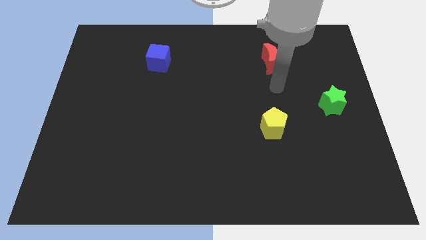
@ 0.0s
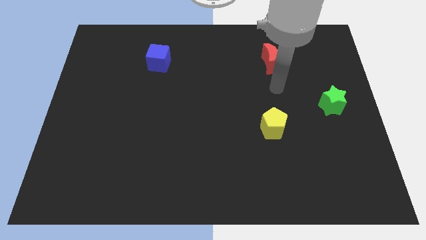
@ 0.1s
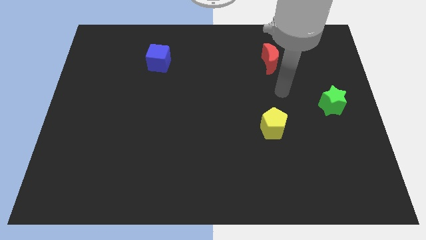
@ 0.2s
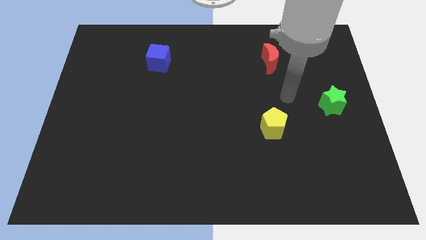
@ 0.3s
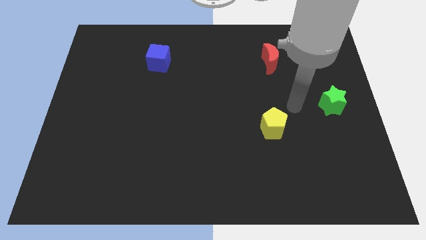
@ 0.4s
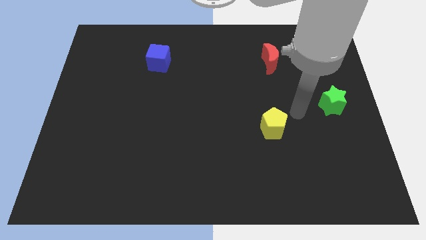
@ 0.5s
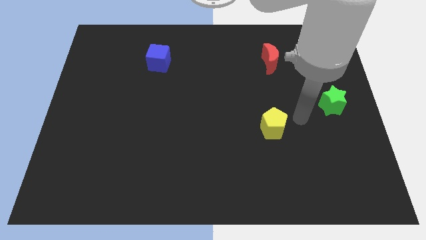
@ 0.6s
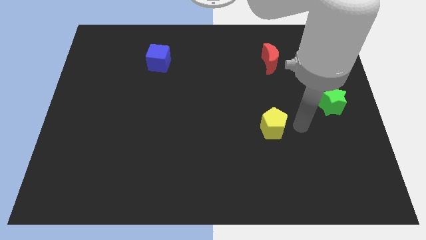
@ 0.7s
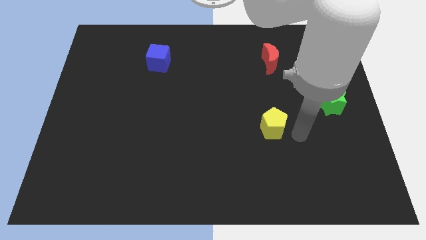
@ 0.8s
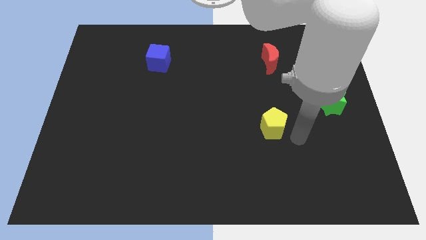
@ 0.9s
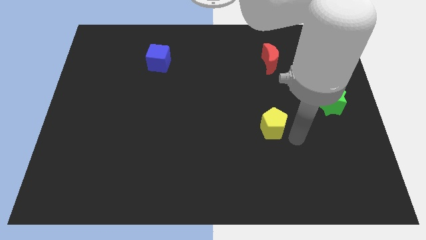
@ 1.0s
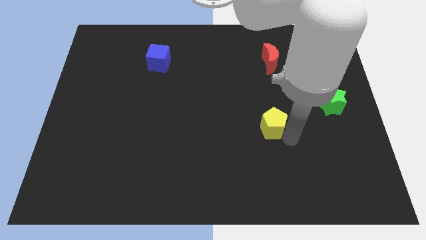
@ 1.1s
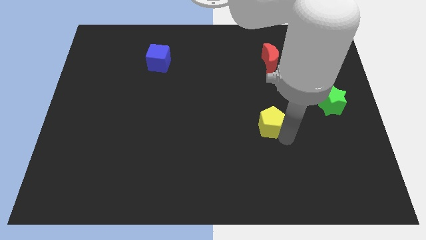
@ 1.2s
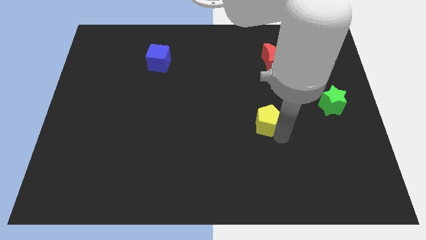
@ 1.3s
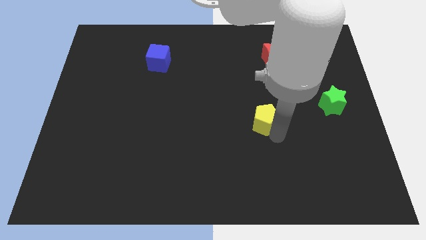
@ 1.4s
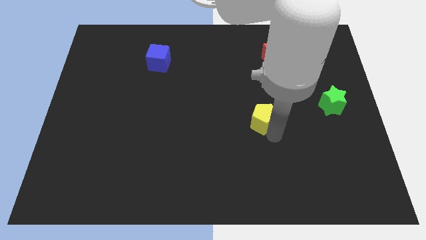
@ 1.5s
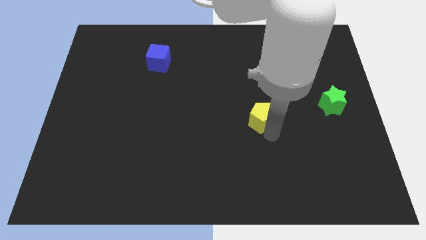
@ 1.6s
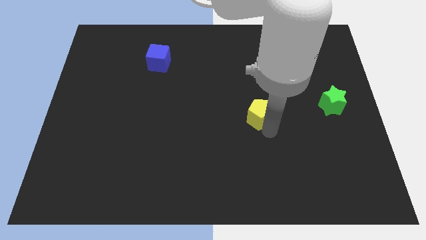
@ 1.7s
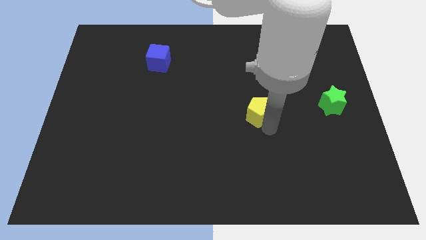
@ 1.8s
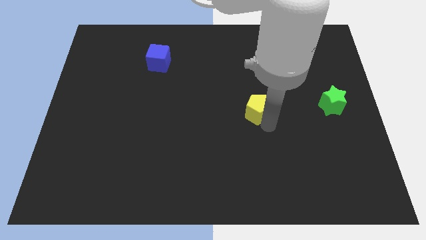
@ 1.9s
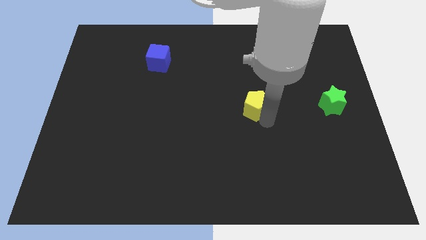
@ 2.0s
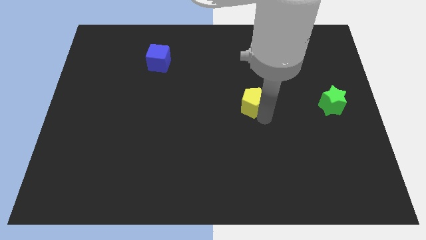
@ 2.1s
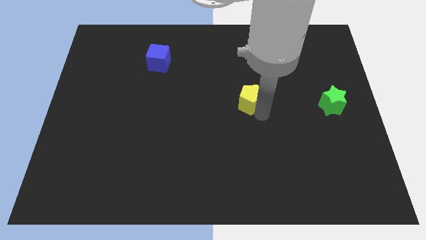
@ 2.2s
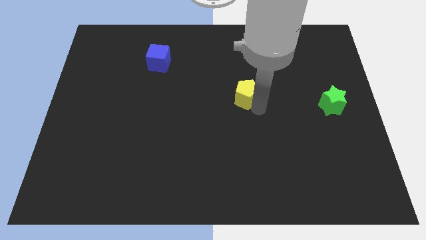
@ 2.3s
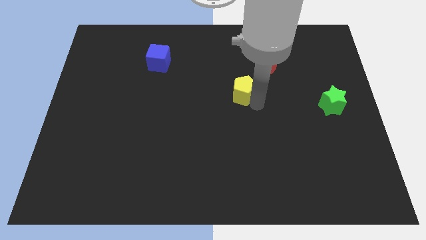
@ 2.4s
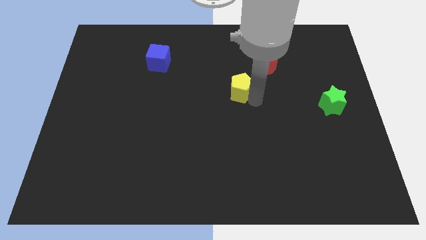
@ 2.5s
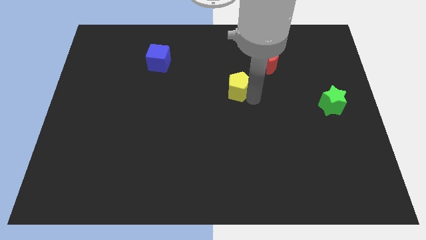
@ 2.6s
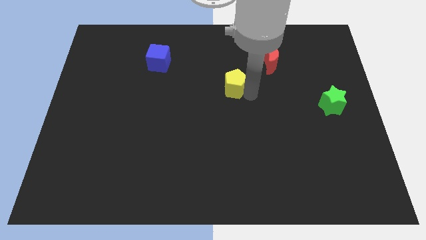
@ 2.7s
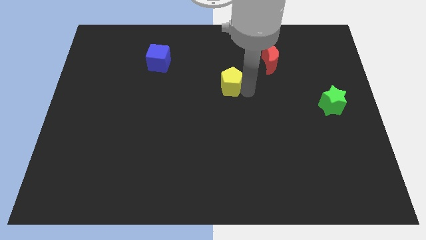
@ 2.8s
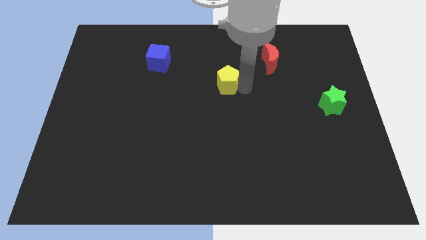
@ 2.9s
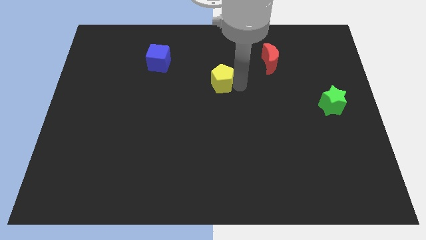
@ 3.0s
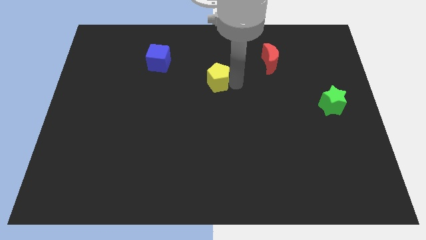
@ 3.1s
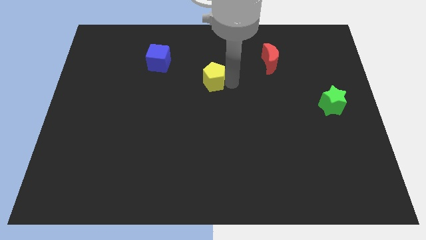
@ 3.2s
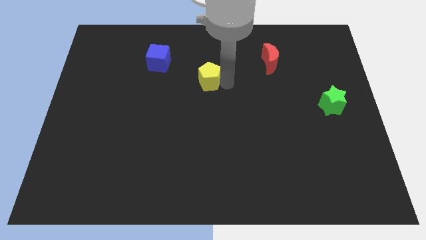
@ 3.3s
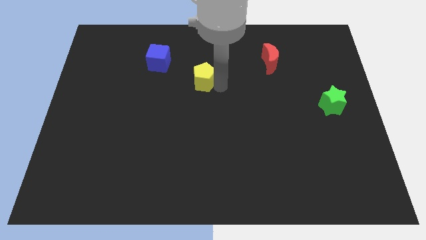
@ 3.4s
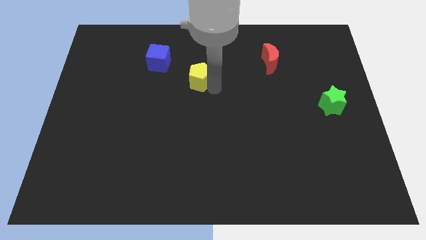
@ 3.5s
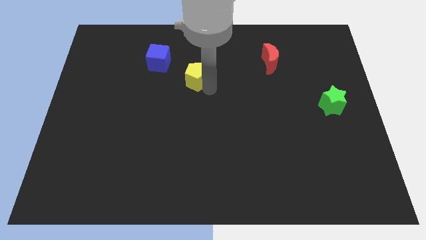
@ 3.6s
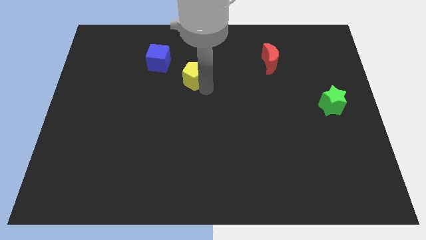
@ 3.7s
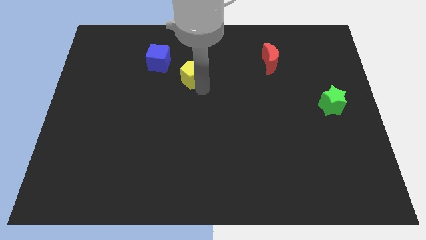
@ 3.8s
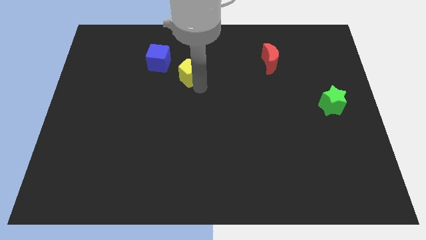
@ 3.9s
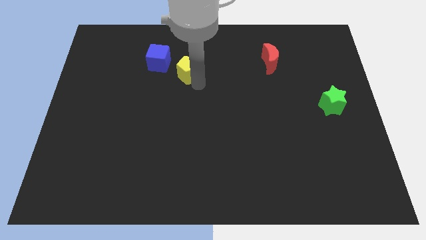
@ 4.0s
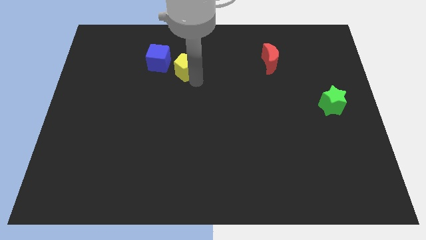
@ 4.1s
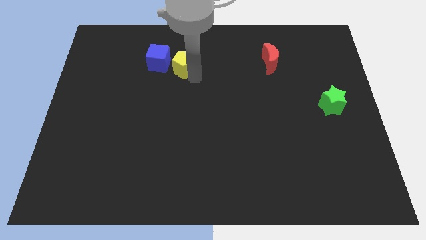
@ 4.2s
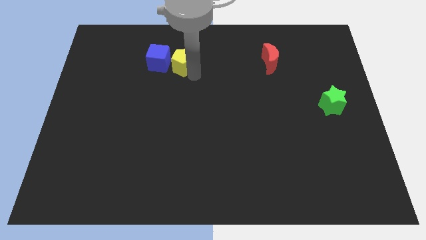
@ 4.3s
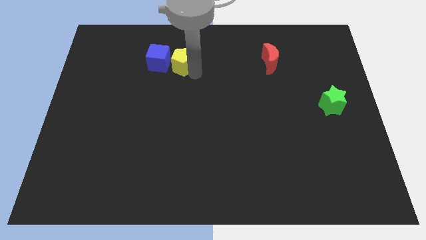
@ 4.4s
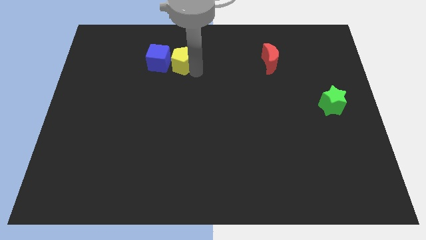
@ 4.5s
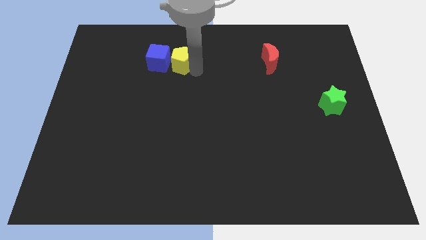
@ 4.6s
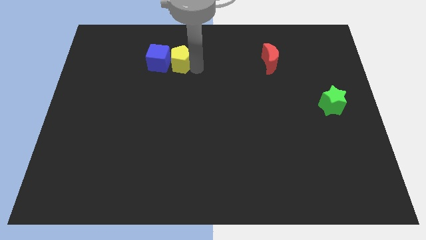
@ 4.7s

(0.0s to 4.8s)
slide the yellow pentagon towards the blue cube

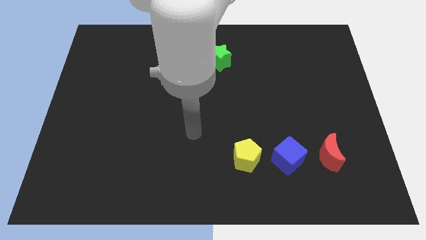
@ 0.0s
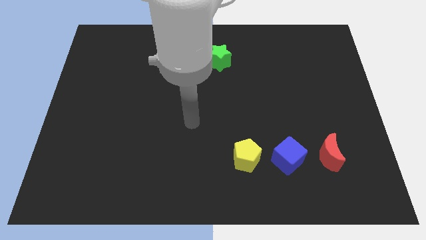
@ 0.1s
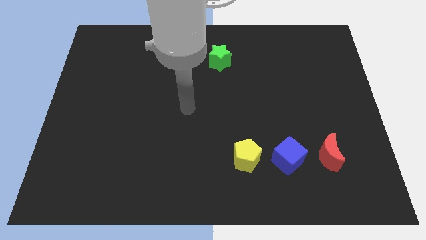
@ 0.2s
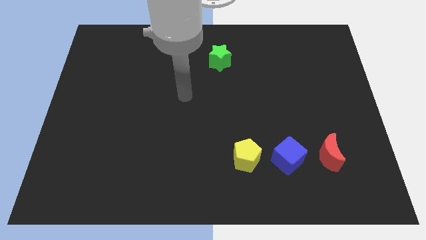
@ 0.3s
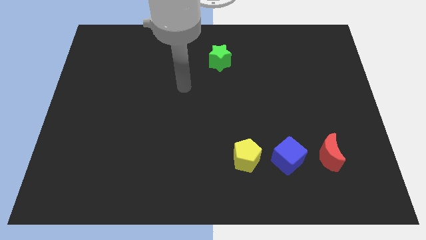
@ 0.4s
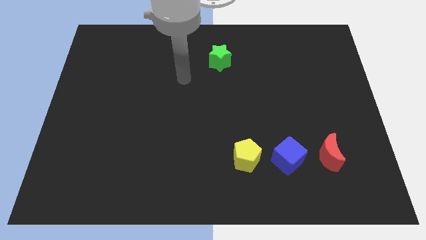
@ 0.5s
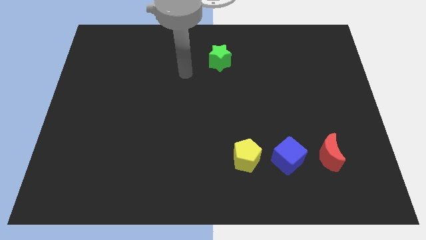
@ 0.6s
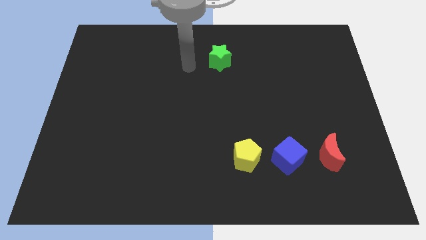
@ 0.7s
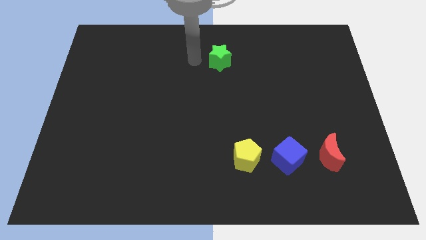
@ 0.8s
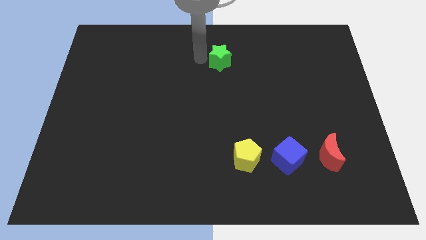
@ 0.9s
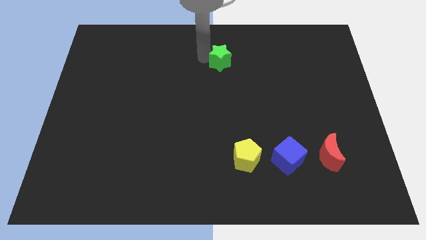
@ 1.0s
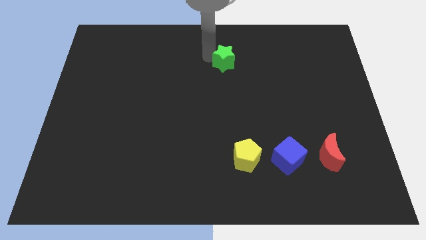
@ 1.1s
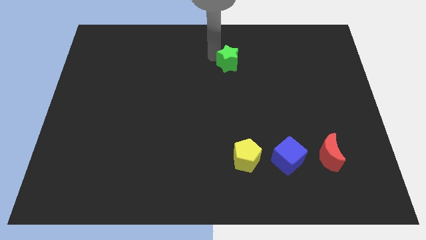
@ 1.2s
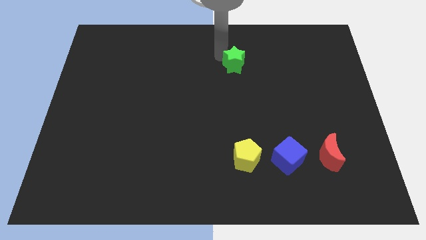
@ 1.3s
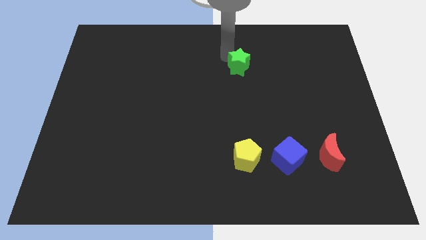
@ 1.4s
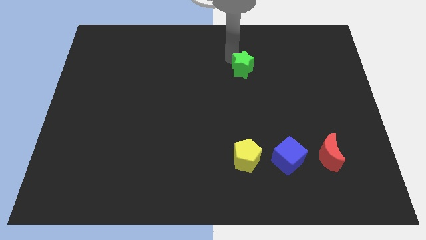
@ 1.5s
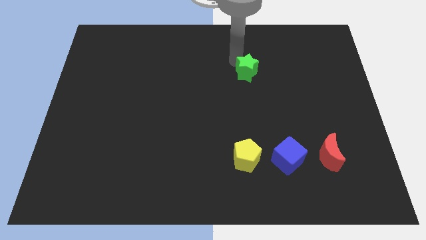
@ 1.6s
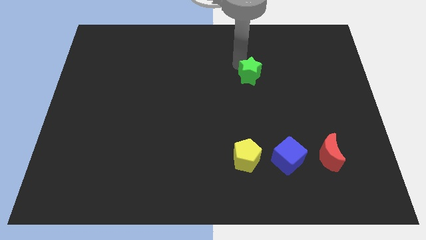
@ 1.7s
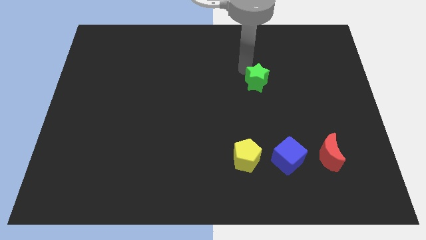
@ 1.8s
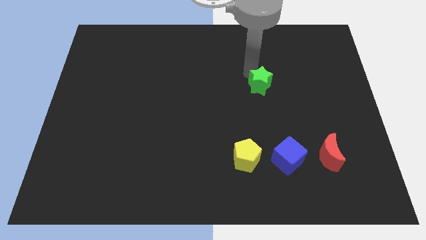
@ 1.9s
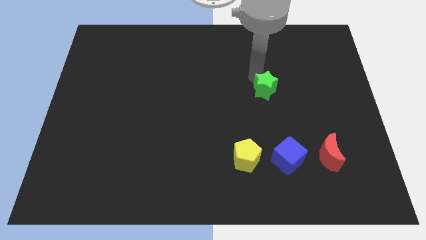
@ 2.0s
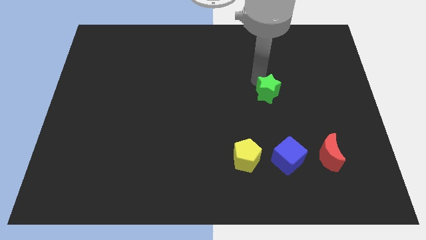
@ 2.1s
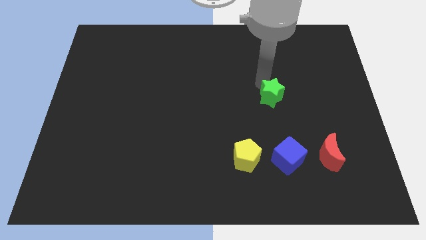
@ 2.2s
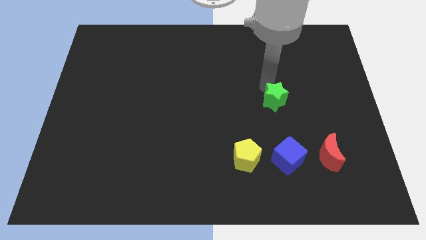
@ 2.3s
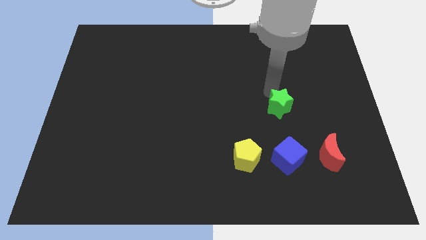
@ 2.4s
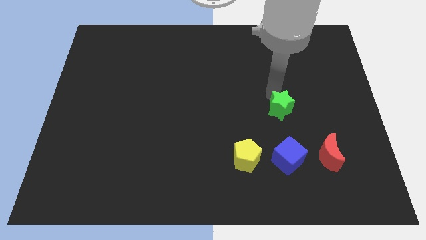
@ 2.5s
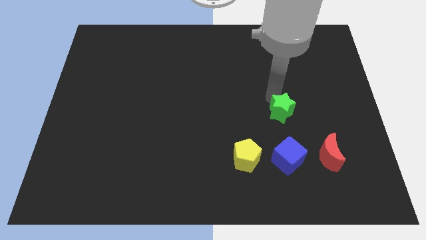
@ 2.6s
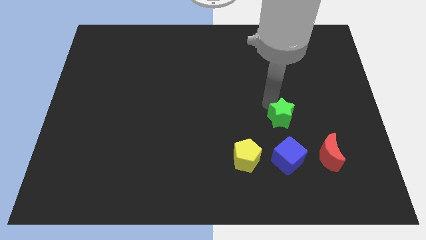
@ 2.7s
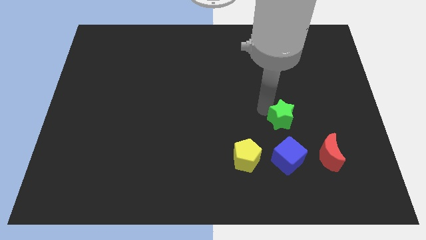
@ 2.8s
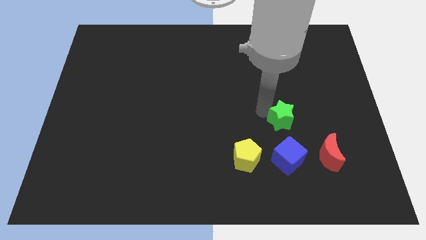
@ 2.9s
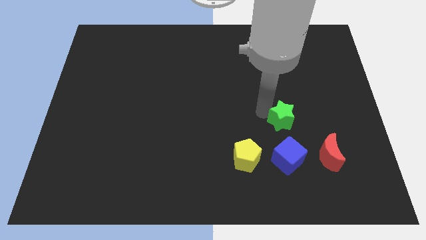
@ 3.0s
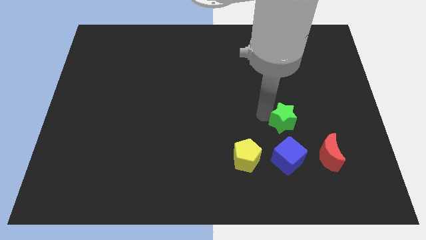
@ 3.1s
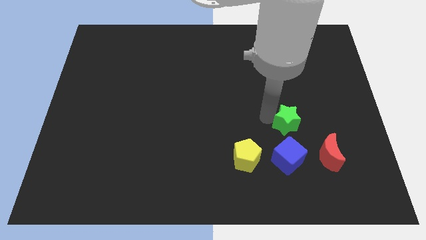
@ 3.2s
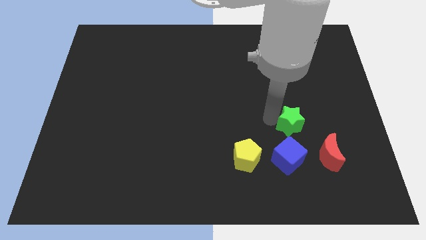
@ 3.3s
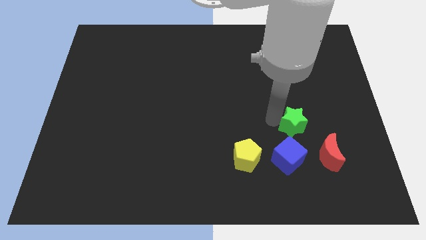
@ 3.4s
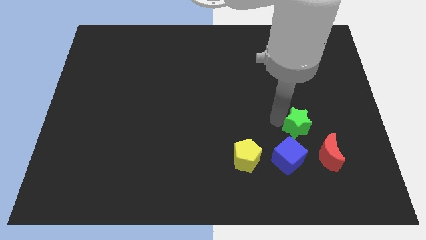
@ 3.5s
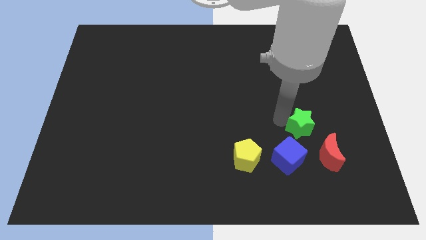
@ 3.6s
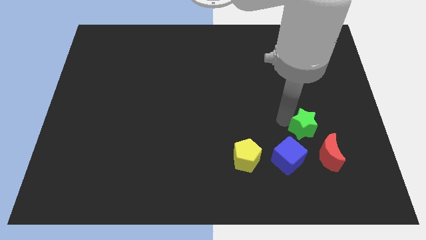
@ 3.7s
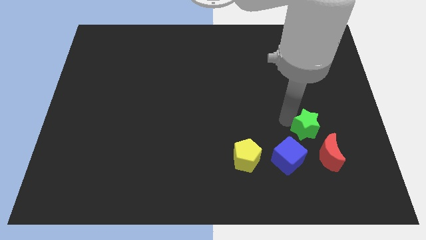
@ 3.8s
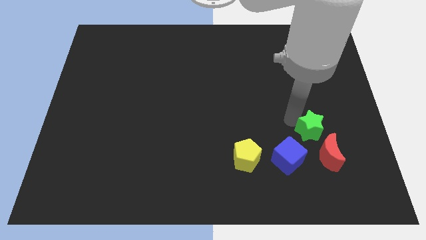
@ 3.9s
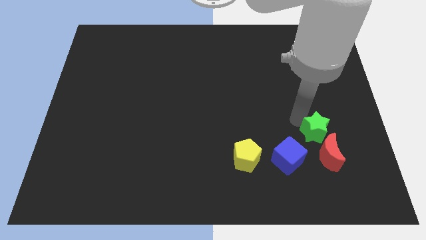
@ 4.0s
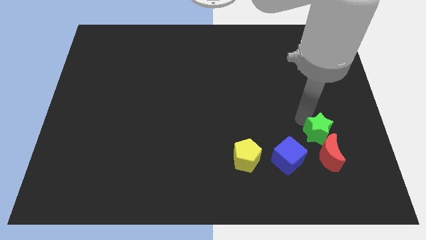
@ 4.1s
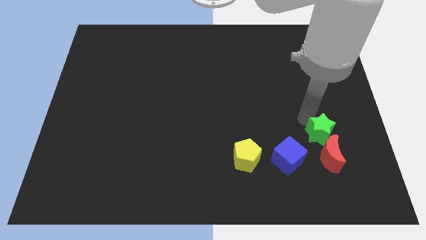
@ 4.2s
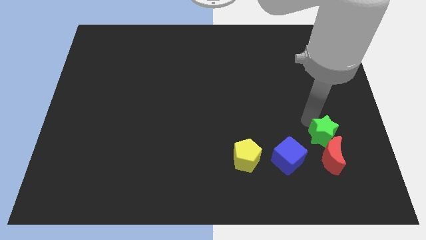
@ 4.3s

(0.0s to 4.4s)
push the star towards the moon
